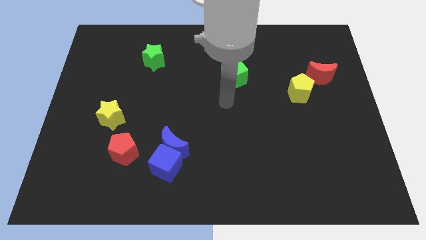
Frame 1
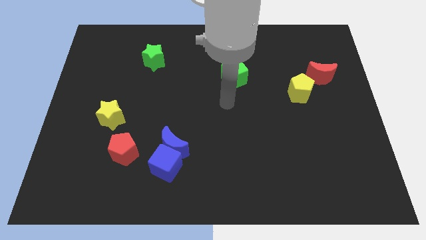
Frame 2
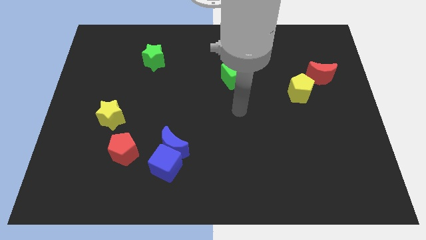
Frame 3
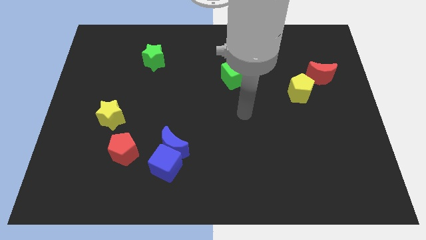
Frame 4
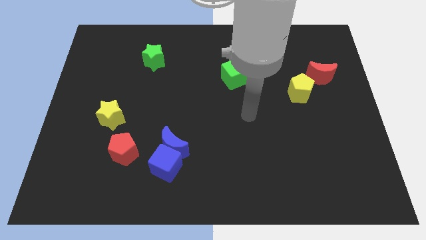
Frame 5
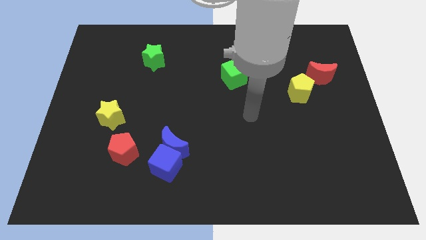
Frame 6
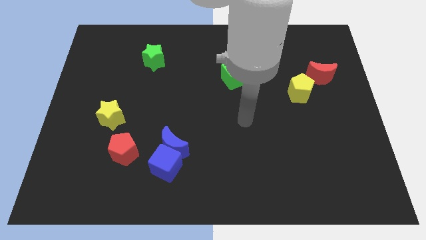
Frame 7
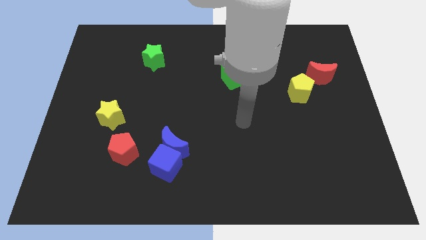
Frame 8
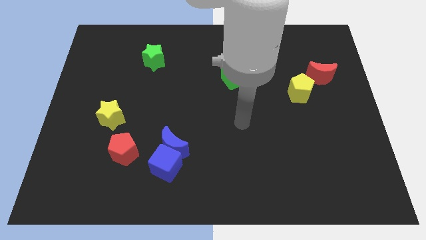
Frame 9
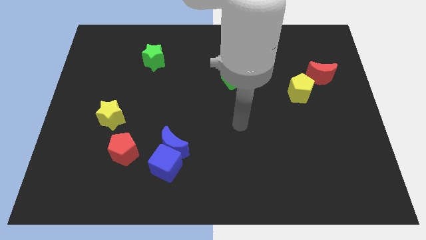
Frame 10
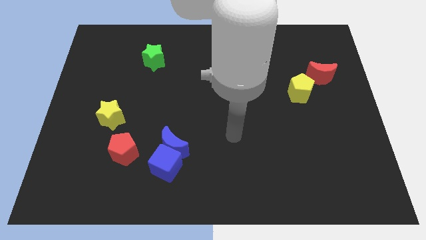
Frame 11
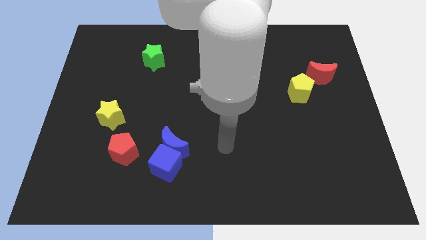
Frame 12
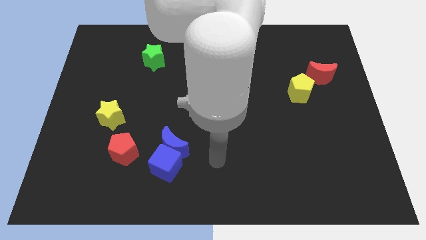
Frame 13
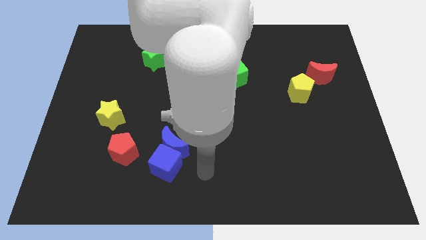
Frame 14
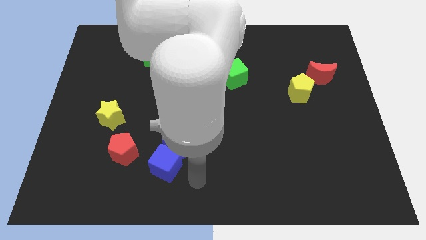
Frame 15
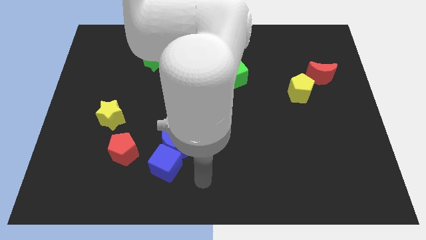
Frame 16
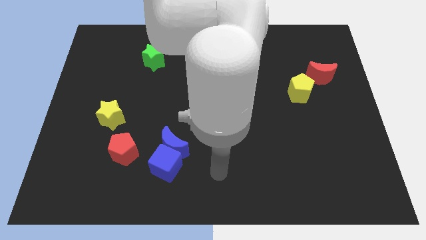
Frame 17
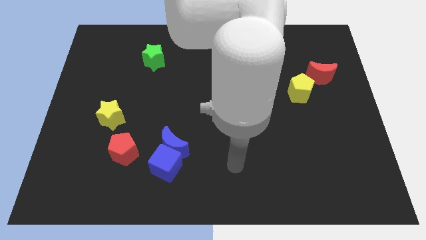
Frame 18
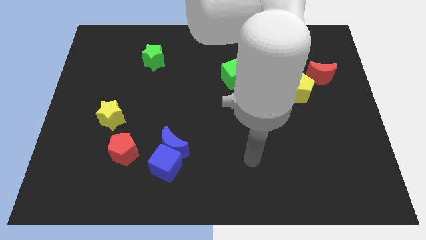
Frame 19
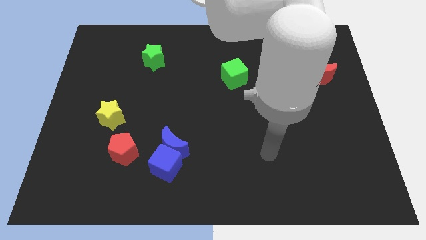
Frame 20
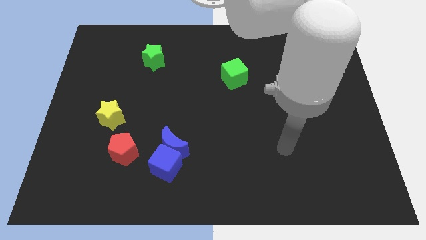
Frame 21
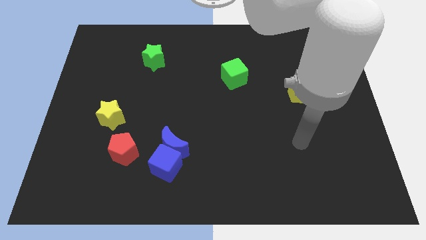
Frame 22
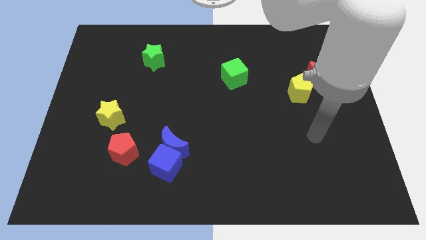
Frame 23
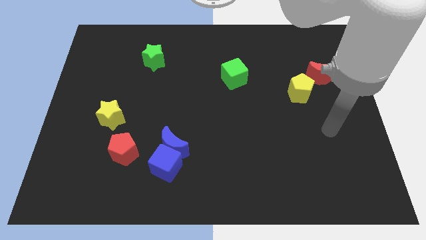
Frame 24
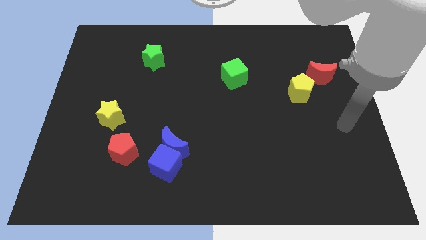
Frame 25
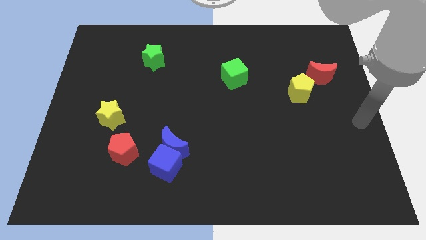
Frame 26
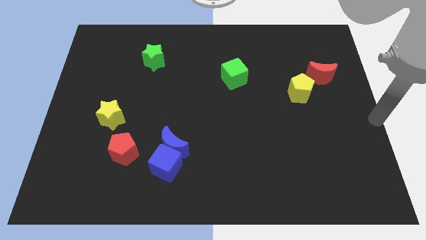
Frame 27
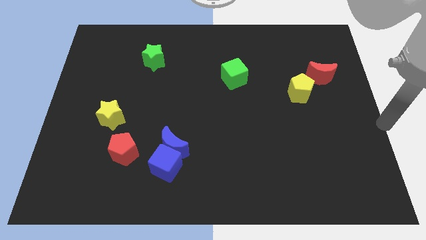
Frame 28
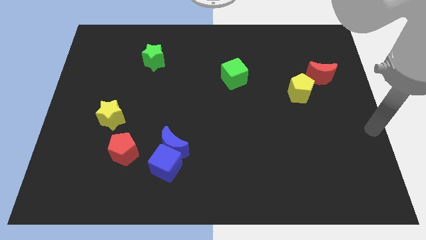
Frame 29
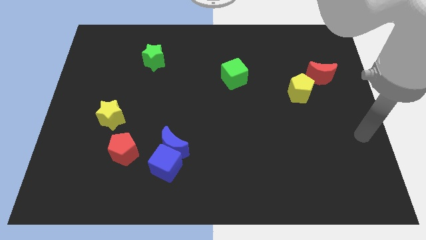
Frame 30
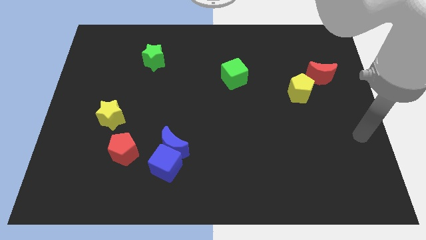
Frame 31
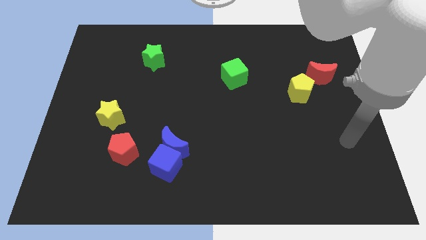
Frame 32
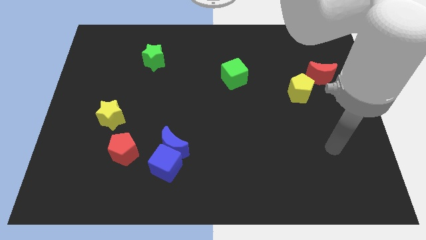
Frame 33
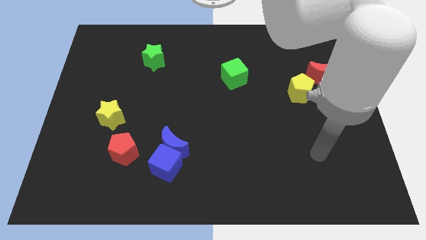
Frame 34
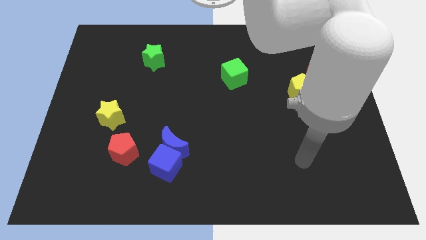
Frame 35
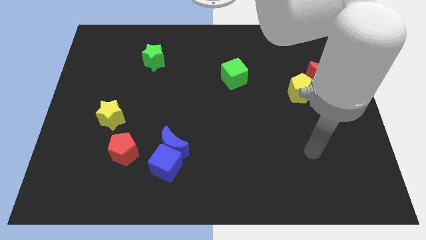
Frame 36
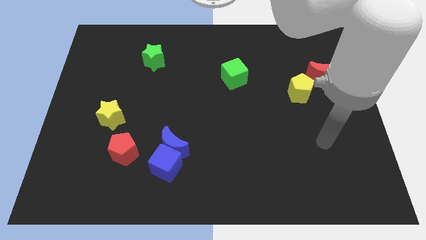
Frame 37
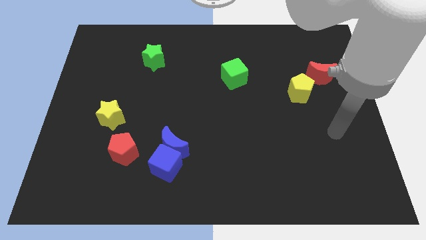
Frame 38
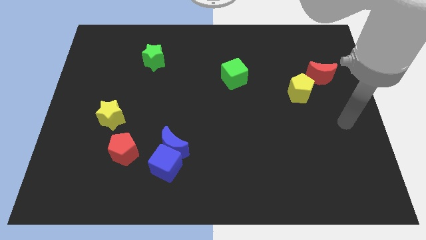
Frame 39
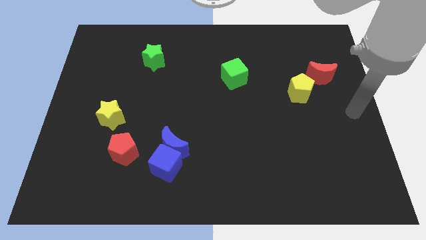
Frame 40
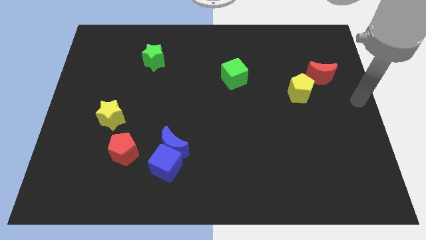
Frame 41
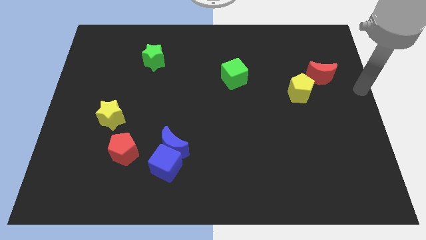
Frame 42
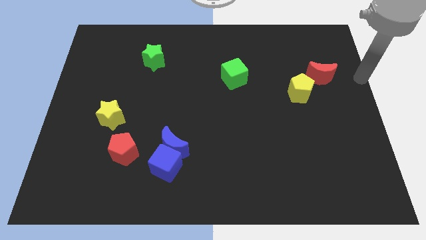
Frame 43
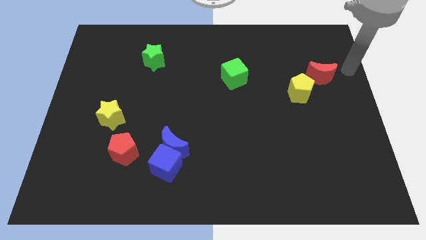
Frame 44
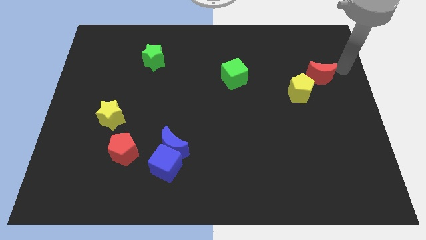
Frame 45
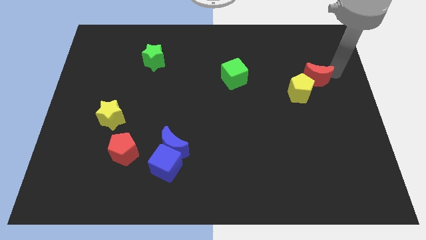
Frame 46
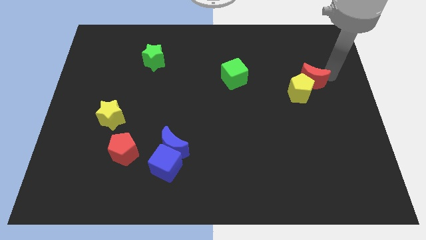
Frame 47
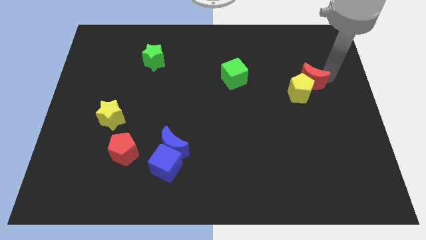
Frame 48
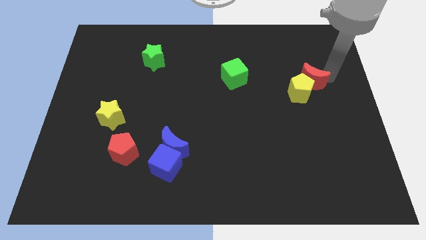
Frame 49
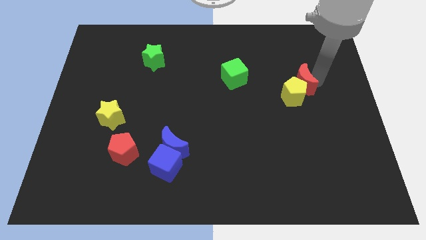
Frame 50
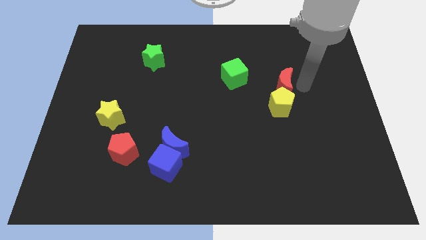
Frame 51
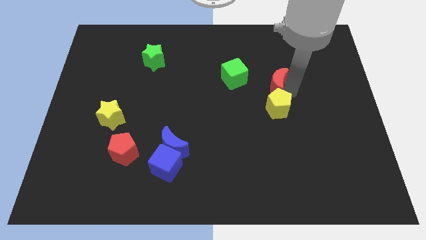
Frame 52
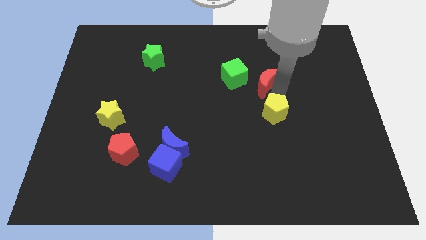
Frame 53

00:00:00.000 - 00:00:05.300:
move the yellow pentagon and the red crescent slightly to the left

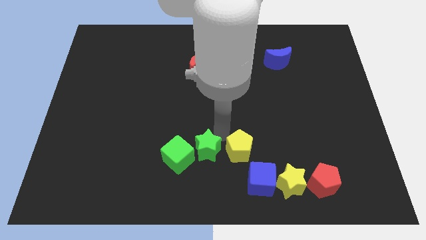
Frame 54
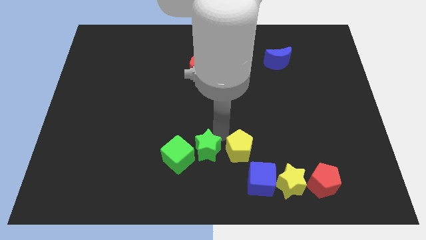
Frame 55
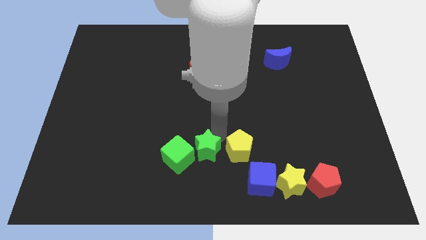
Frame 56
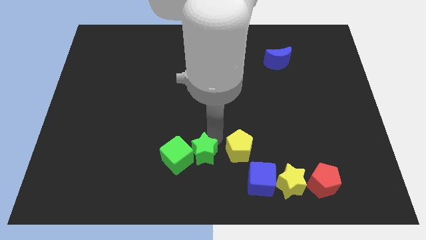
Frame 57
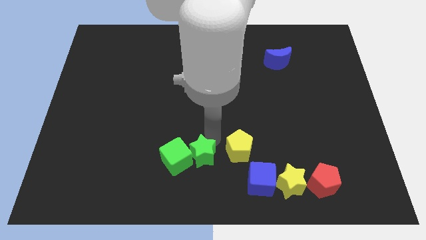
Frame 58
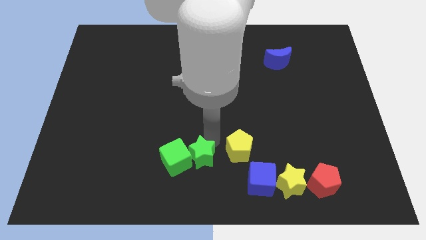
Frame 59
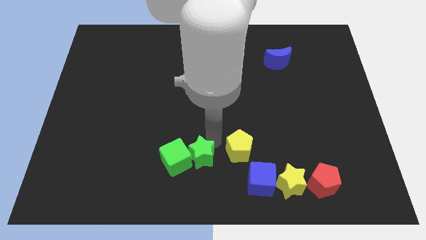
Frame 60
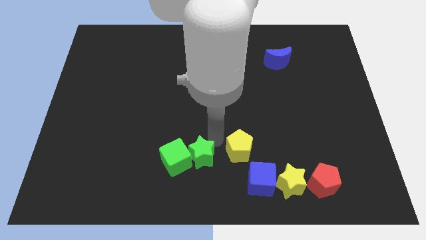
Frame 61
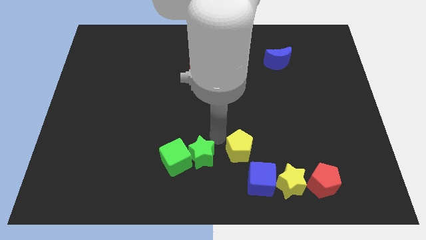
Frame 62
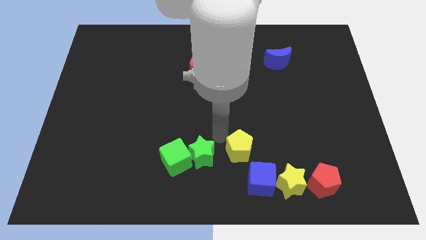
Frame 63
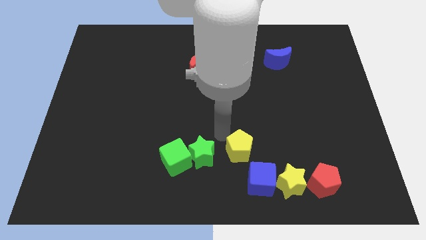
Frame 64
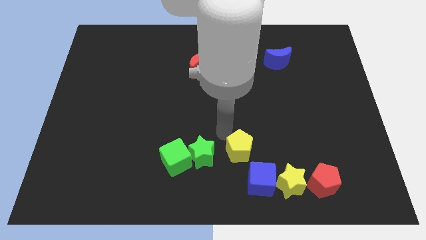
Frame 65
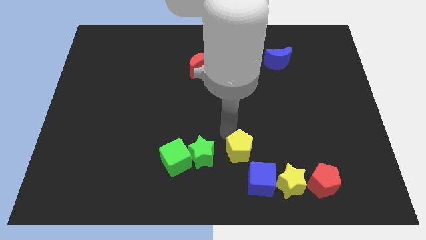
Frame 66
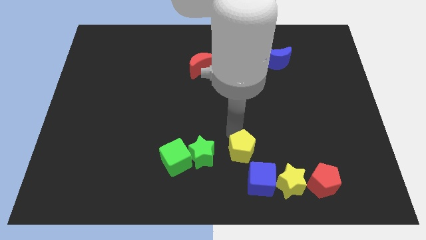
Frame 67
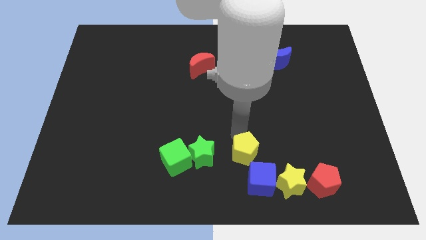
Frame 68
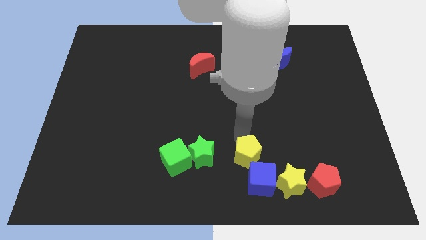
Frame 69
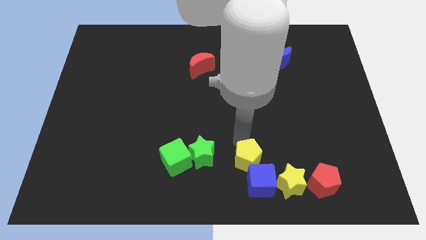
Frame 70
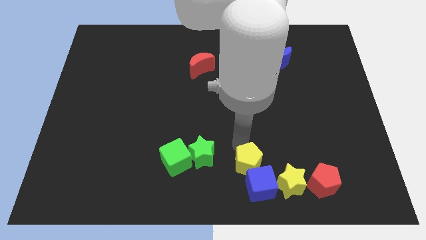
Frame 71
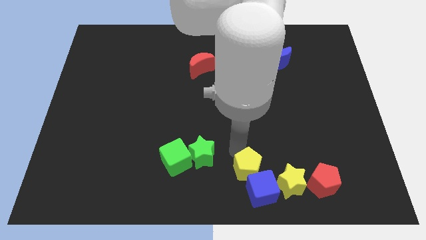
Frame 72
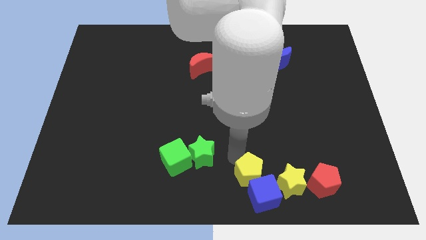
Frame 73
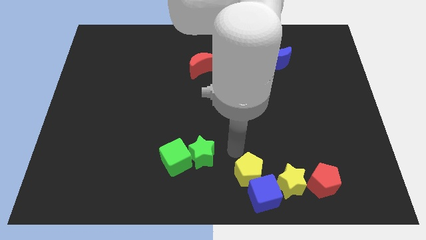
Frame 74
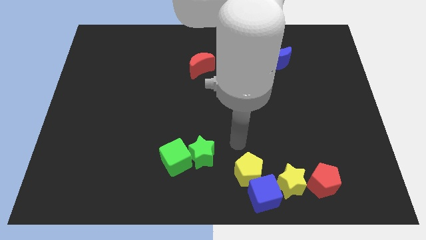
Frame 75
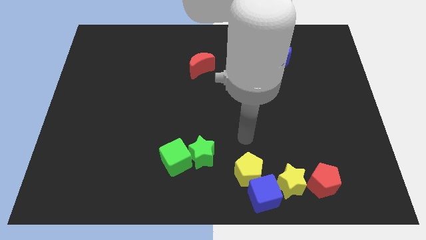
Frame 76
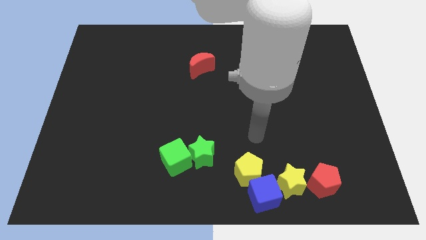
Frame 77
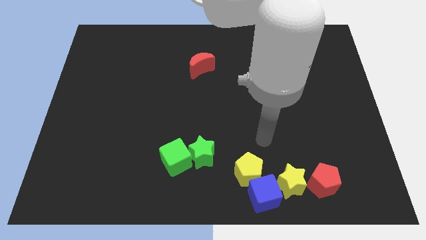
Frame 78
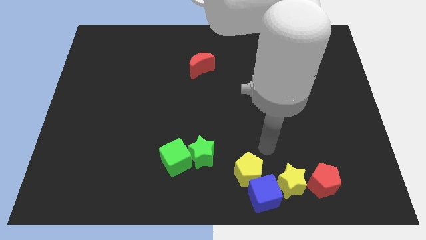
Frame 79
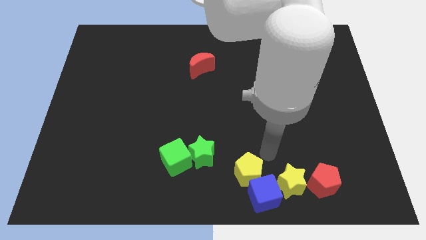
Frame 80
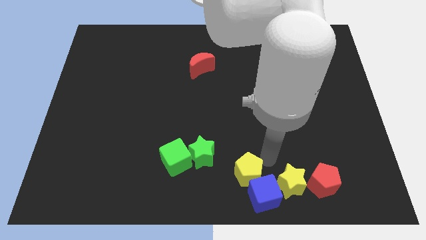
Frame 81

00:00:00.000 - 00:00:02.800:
push the yellow pentagon into the blue cube

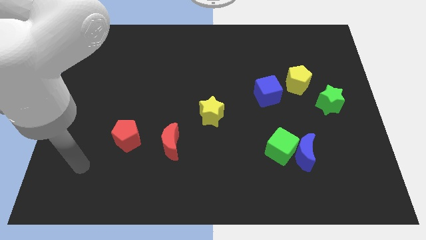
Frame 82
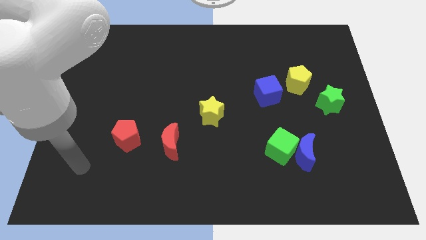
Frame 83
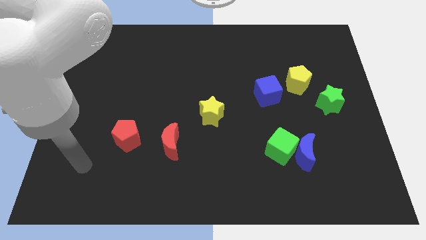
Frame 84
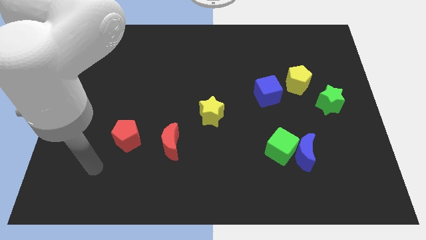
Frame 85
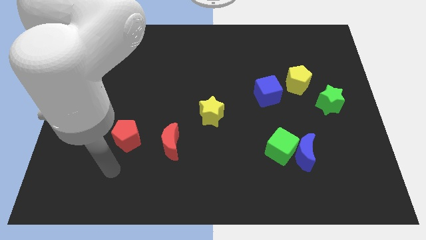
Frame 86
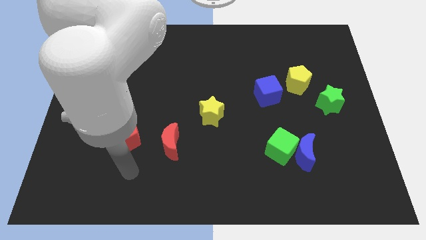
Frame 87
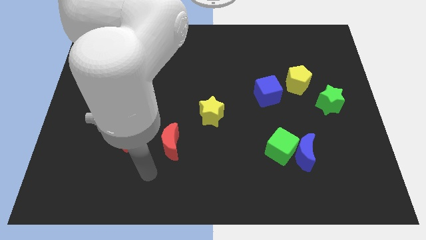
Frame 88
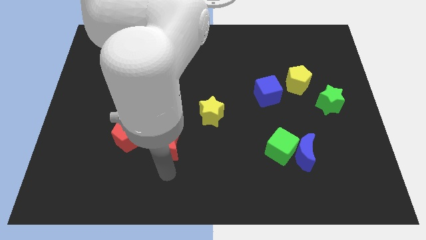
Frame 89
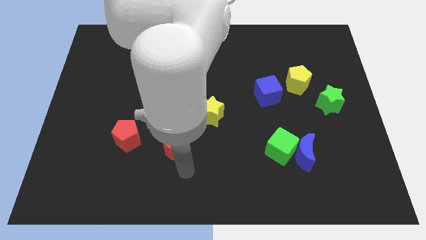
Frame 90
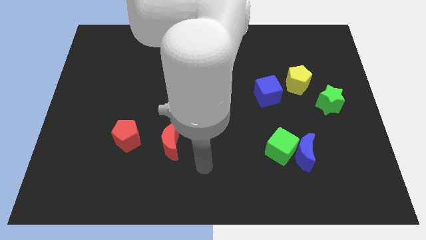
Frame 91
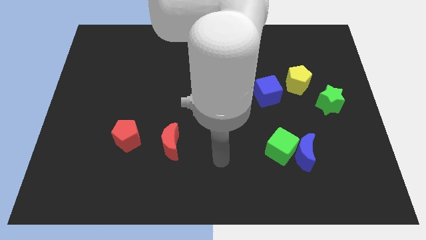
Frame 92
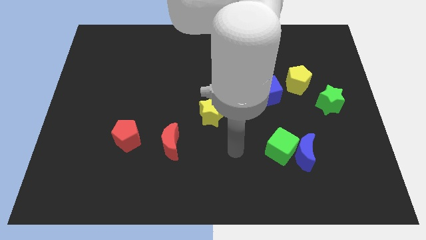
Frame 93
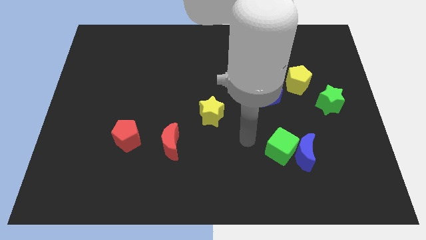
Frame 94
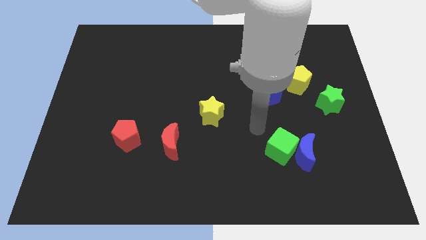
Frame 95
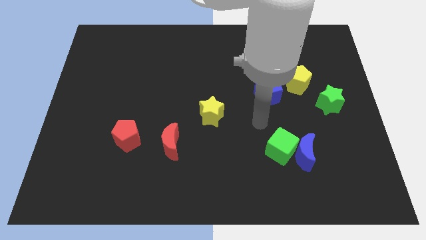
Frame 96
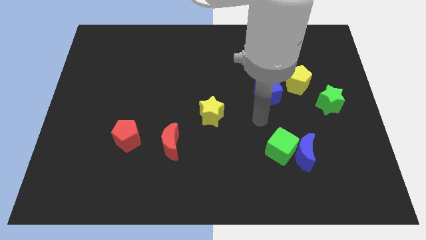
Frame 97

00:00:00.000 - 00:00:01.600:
place your arm to the bottom of blue cube
